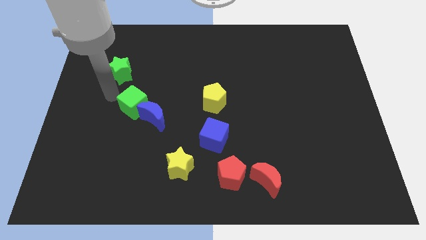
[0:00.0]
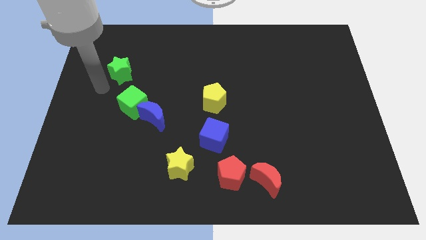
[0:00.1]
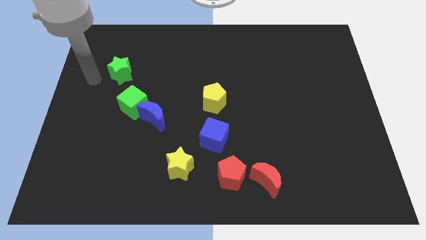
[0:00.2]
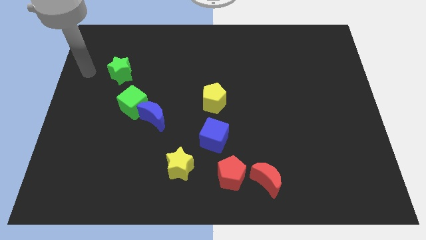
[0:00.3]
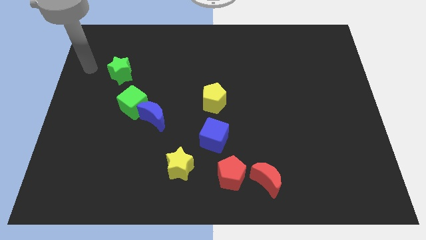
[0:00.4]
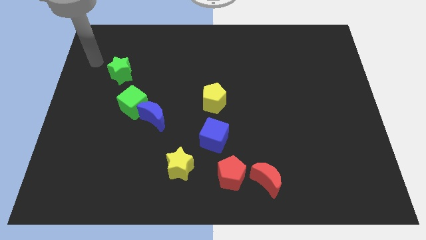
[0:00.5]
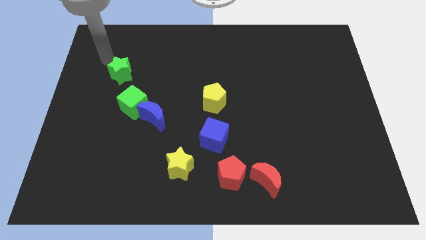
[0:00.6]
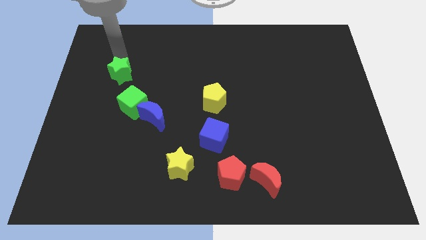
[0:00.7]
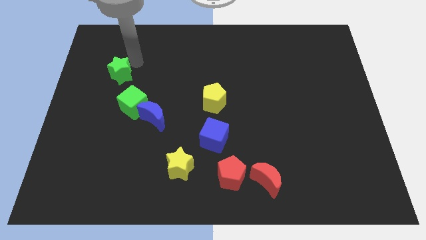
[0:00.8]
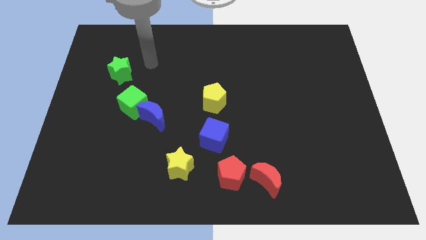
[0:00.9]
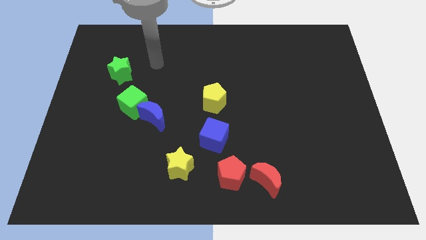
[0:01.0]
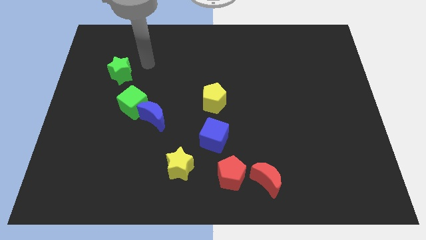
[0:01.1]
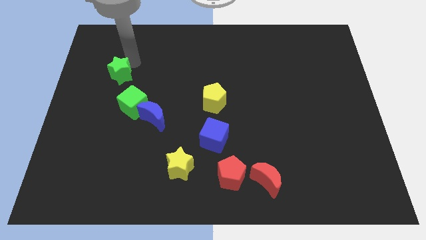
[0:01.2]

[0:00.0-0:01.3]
point your arm at the top right of the green star

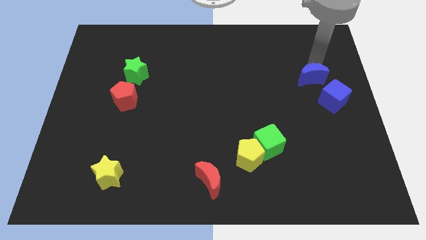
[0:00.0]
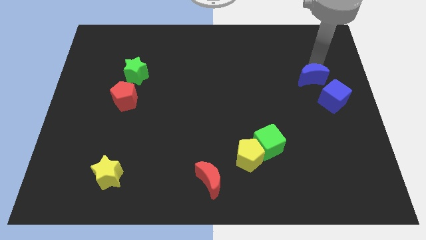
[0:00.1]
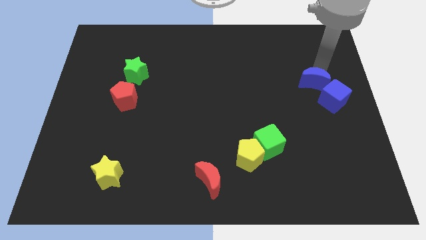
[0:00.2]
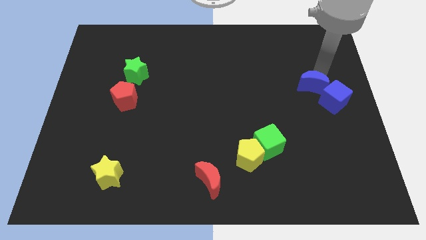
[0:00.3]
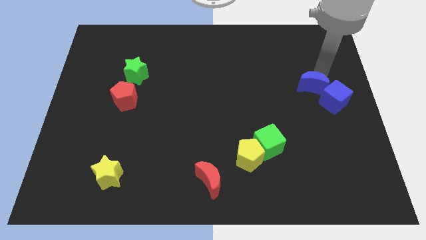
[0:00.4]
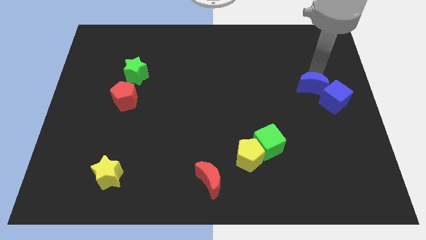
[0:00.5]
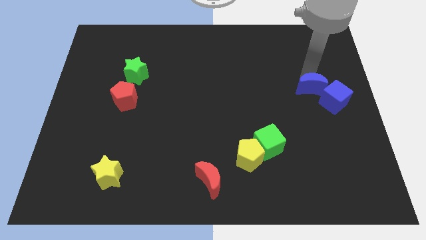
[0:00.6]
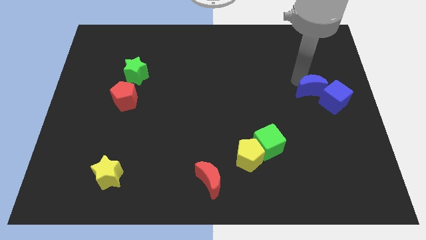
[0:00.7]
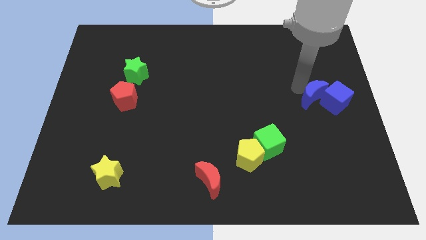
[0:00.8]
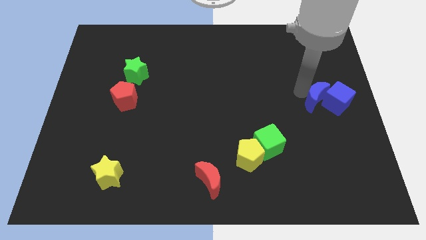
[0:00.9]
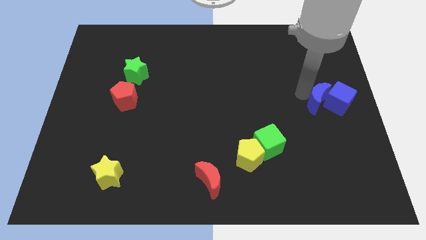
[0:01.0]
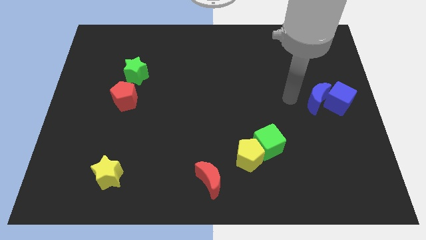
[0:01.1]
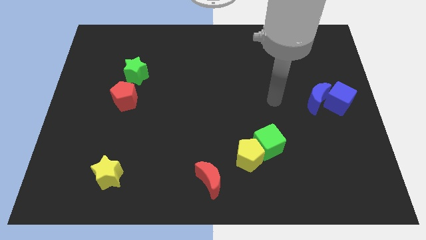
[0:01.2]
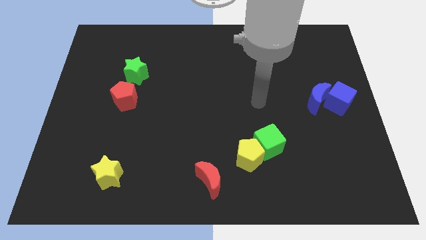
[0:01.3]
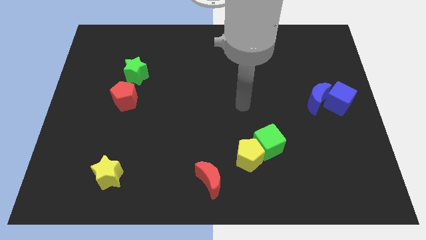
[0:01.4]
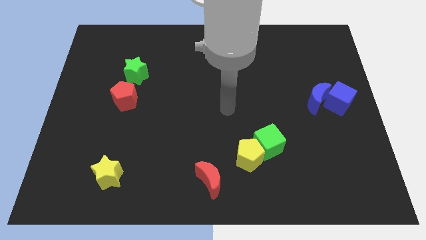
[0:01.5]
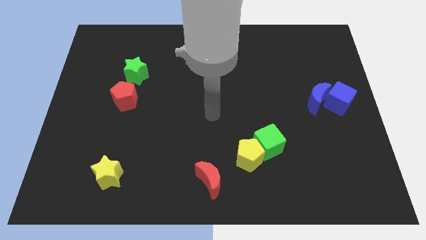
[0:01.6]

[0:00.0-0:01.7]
move blue moon close to the blue cube

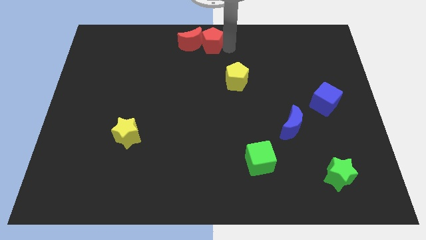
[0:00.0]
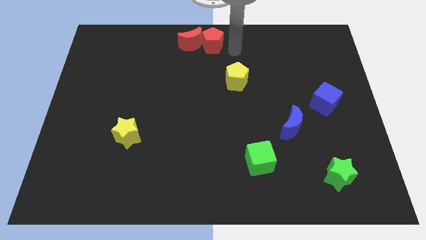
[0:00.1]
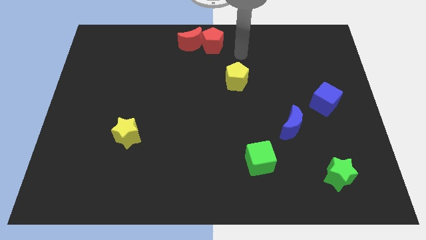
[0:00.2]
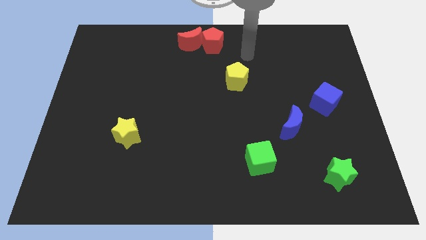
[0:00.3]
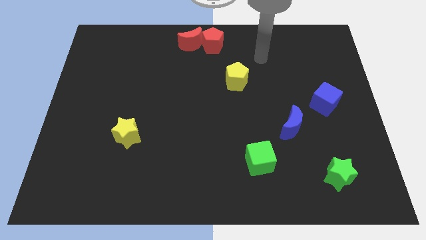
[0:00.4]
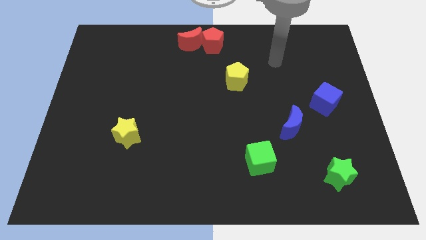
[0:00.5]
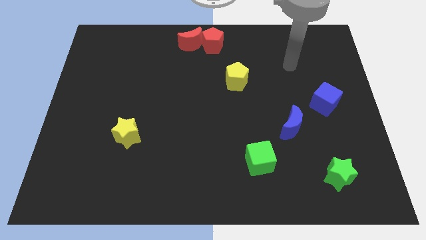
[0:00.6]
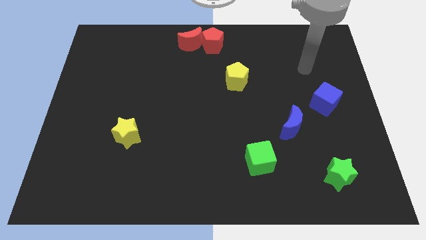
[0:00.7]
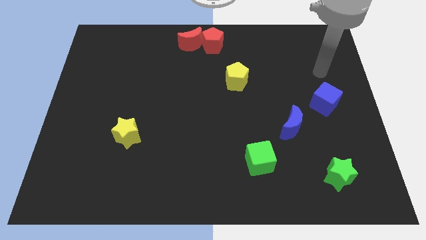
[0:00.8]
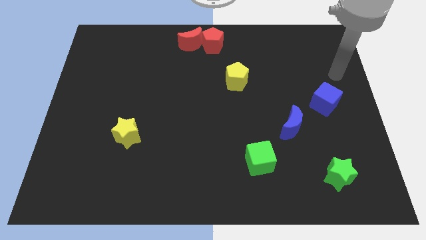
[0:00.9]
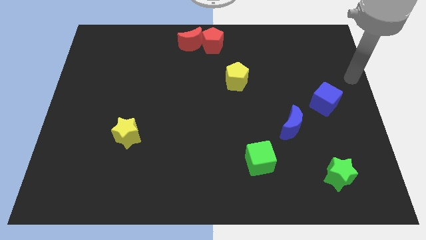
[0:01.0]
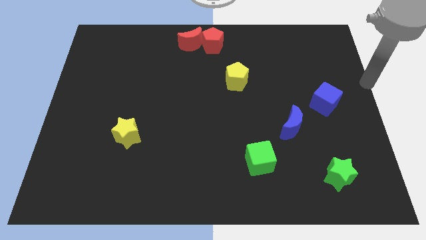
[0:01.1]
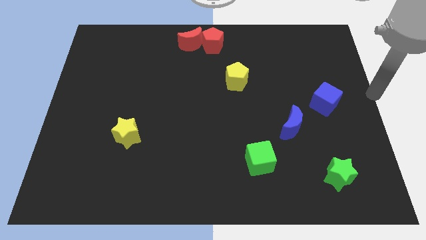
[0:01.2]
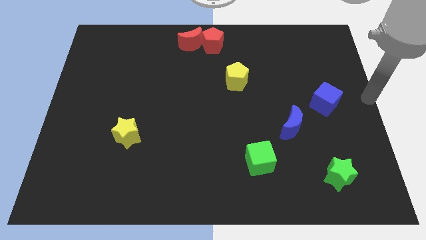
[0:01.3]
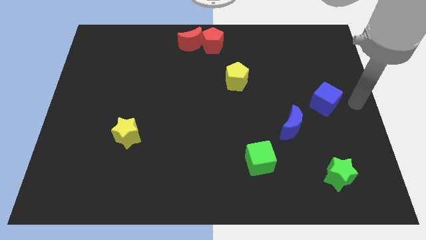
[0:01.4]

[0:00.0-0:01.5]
place your arm to the right of blue cube

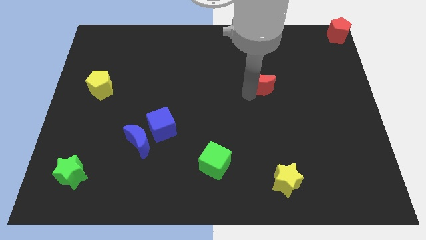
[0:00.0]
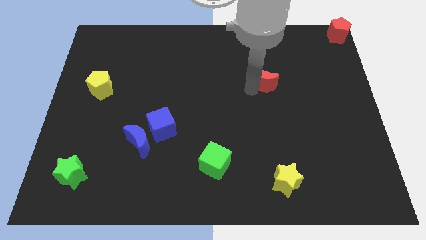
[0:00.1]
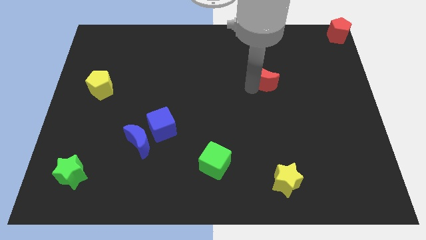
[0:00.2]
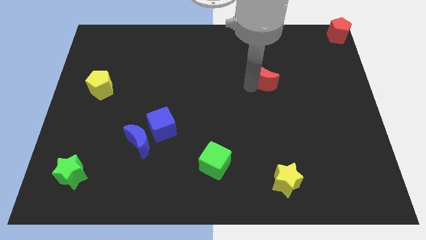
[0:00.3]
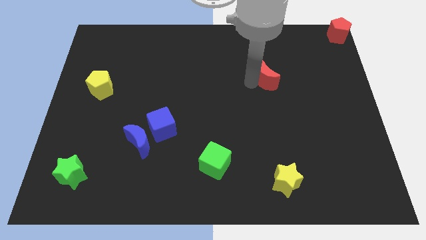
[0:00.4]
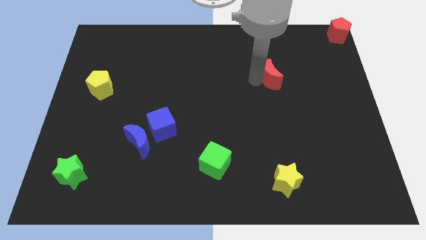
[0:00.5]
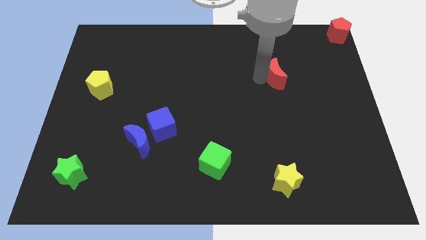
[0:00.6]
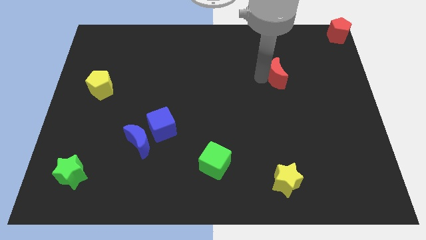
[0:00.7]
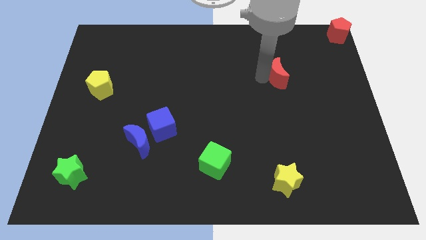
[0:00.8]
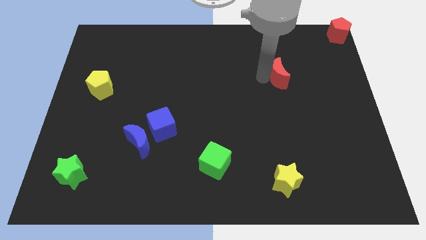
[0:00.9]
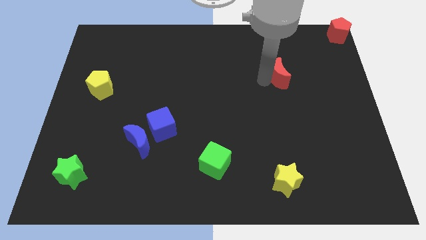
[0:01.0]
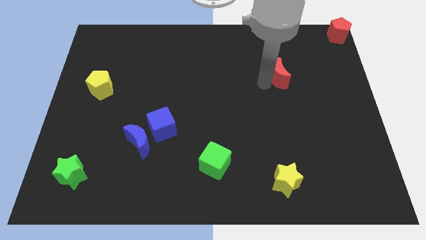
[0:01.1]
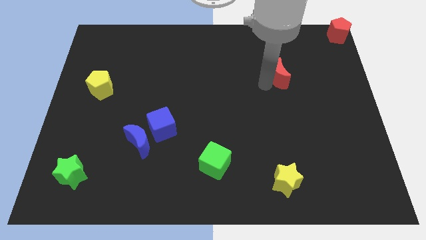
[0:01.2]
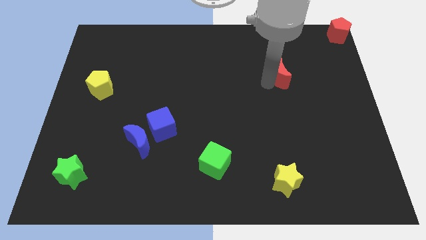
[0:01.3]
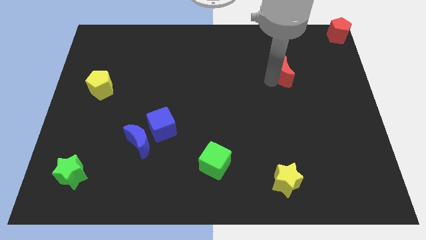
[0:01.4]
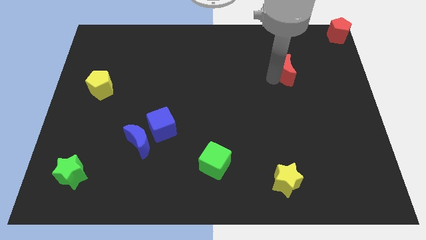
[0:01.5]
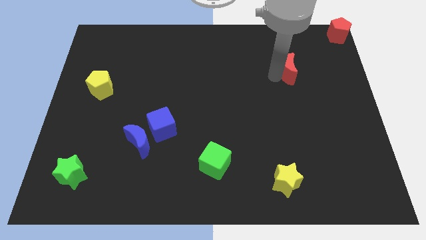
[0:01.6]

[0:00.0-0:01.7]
place the red crescent vertically above the yellow star

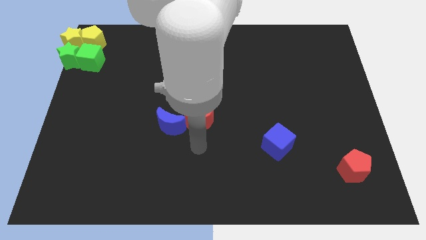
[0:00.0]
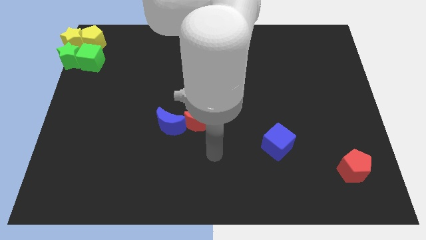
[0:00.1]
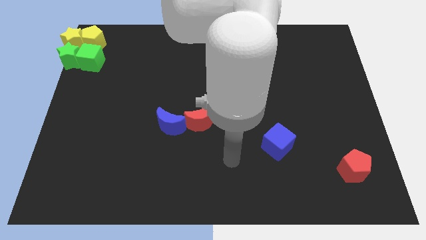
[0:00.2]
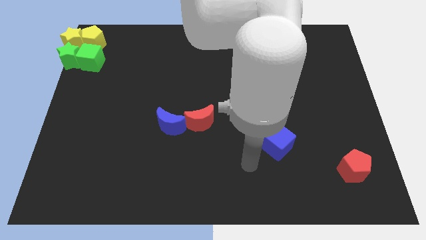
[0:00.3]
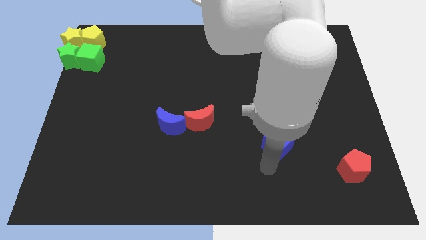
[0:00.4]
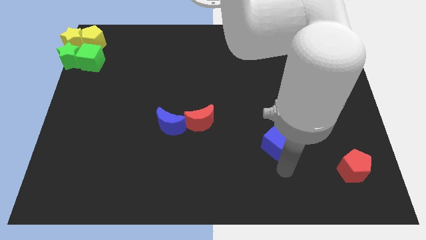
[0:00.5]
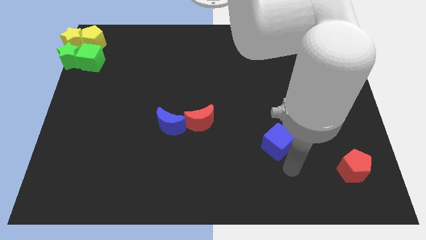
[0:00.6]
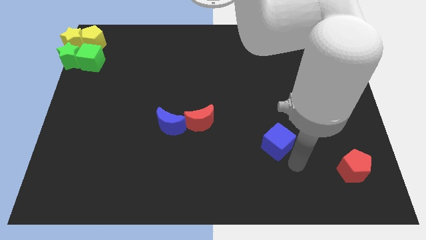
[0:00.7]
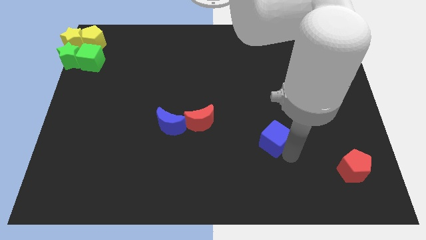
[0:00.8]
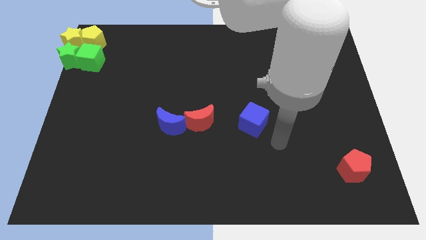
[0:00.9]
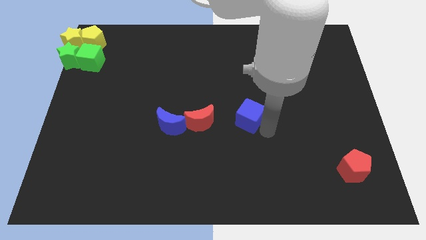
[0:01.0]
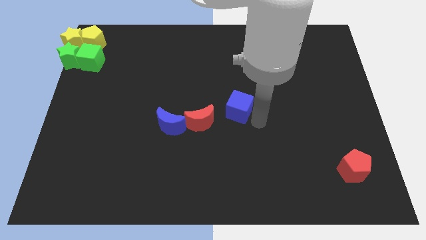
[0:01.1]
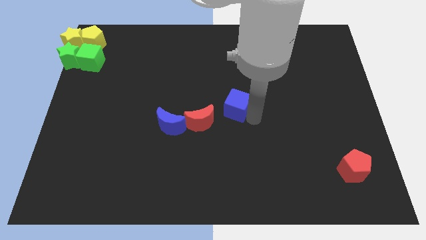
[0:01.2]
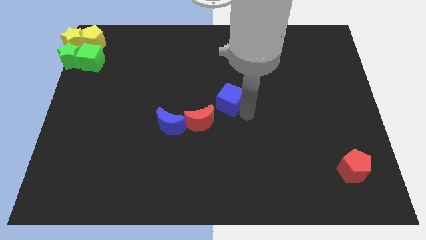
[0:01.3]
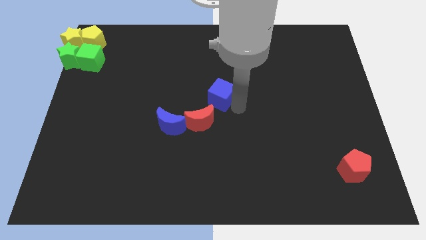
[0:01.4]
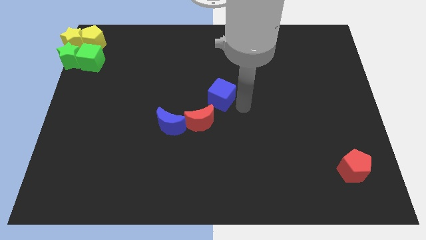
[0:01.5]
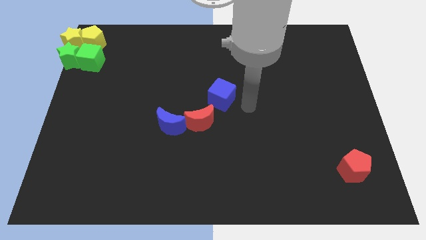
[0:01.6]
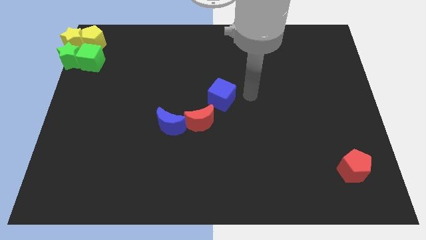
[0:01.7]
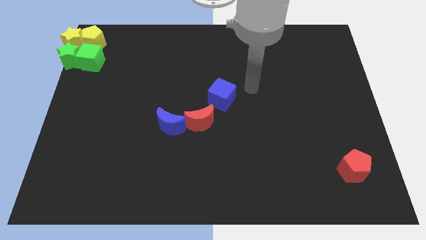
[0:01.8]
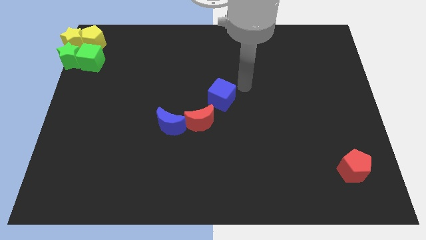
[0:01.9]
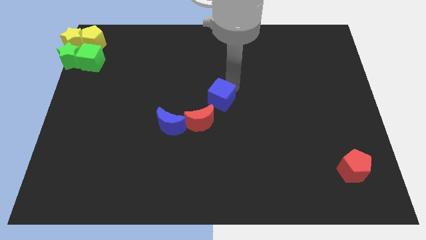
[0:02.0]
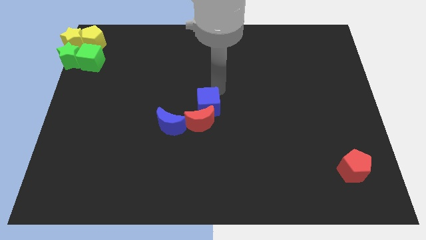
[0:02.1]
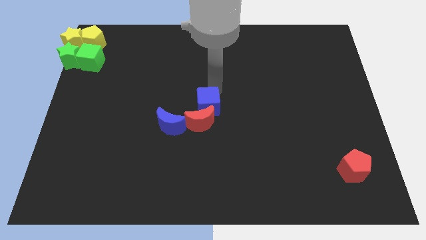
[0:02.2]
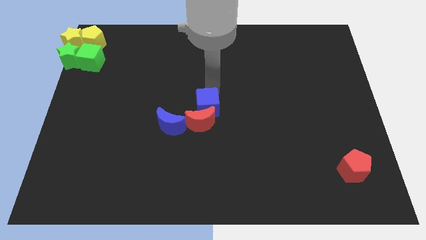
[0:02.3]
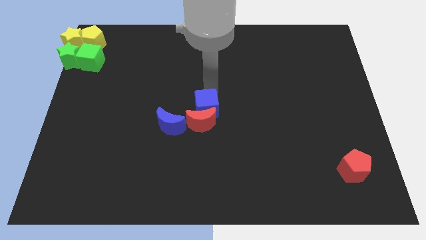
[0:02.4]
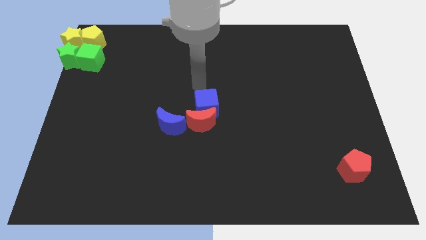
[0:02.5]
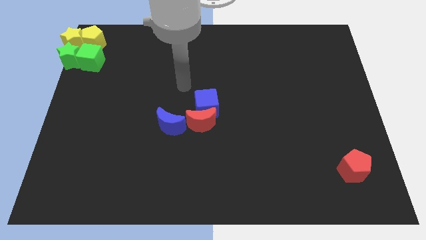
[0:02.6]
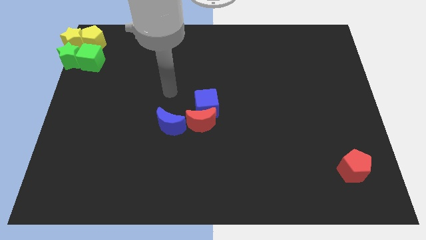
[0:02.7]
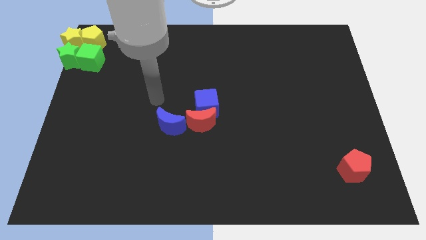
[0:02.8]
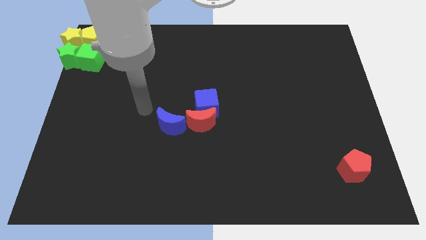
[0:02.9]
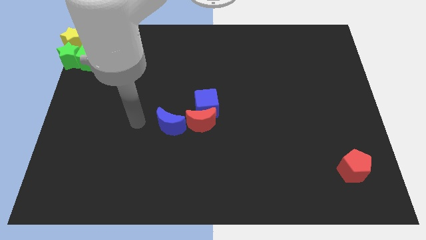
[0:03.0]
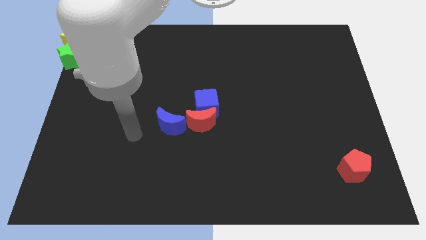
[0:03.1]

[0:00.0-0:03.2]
push the blue cube into the red moon
